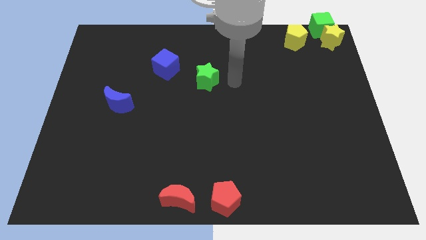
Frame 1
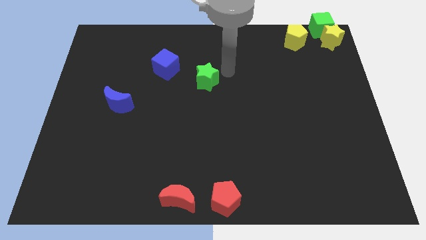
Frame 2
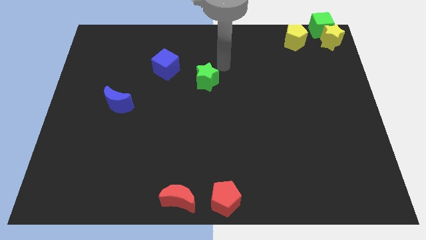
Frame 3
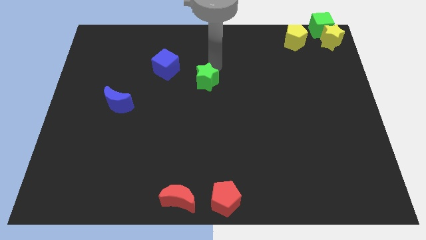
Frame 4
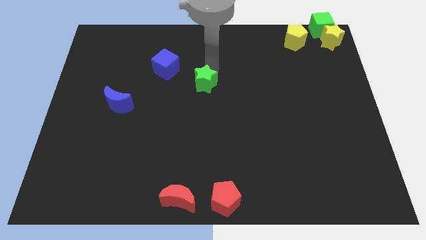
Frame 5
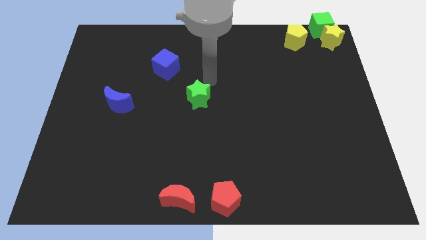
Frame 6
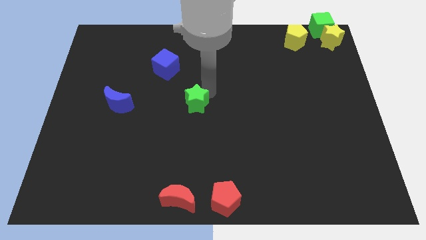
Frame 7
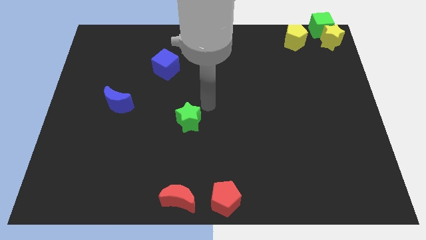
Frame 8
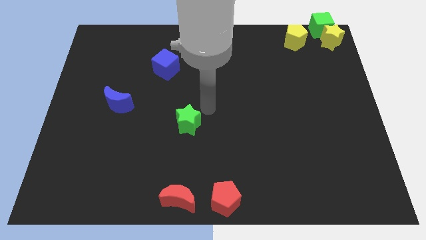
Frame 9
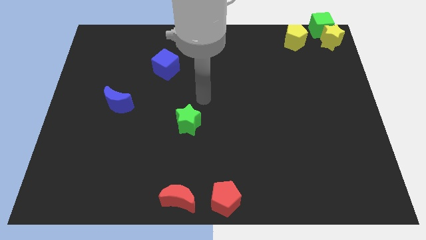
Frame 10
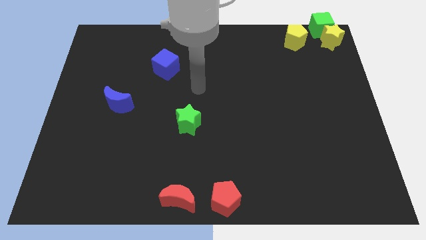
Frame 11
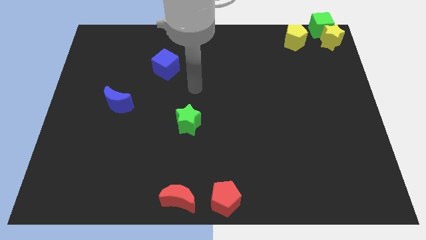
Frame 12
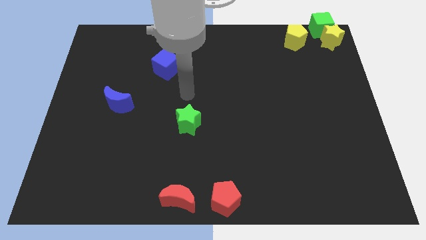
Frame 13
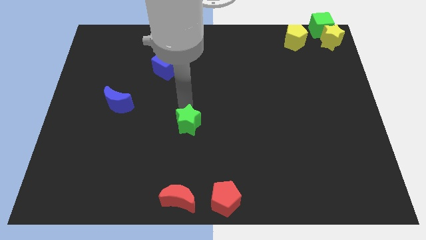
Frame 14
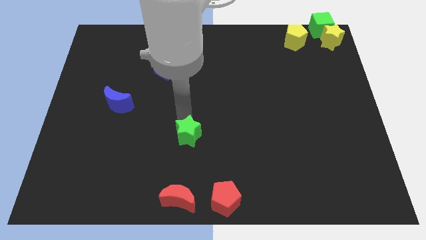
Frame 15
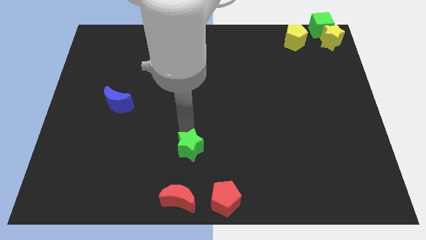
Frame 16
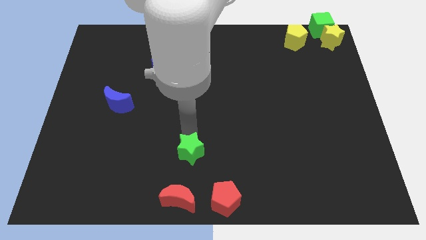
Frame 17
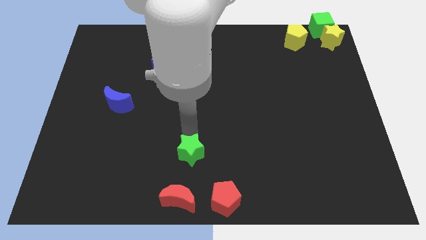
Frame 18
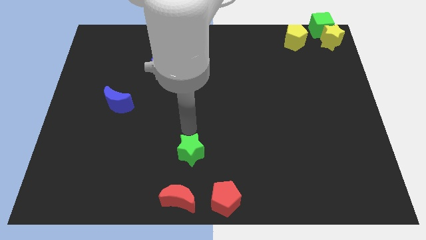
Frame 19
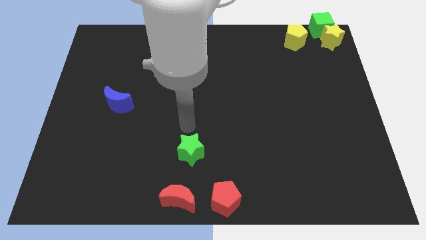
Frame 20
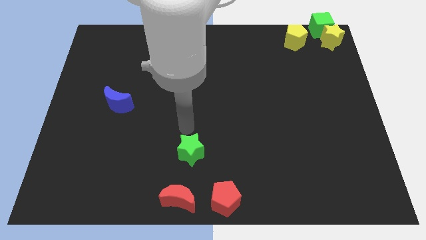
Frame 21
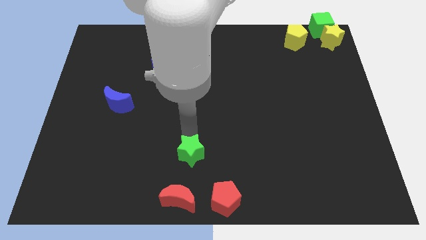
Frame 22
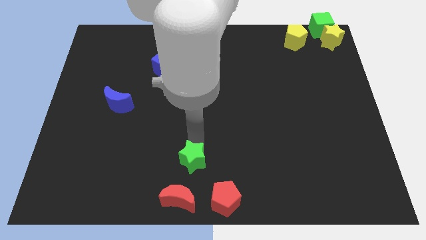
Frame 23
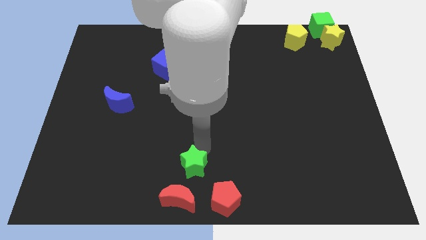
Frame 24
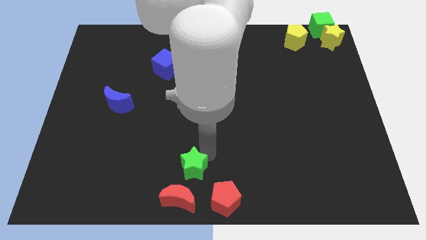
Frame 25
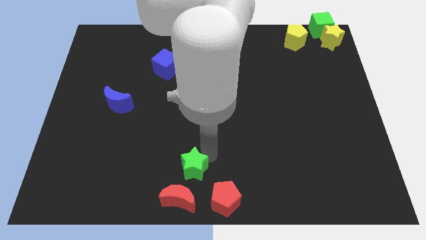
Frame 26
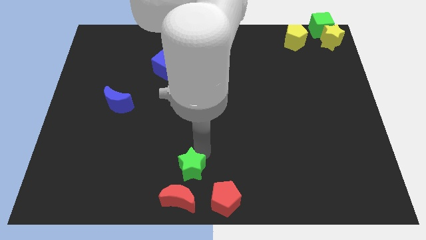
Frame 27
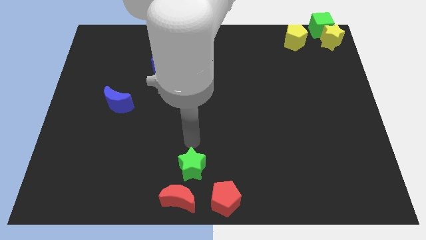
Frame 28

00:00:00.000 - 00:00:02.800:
push the green star towards the red moon

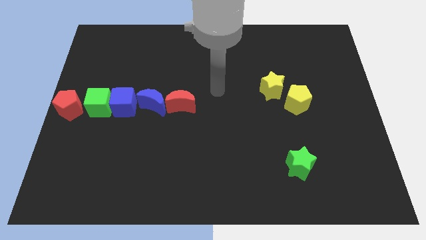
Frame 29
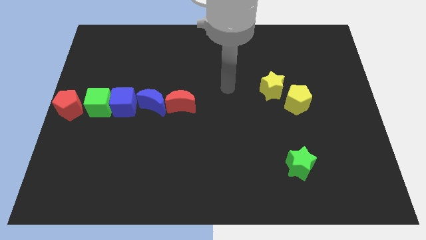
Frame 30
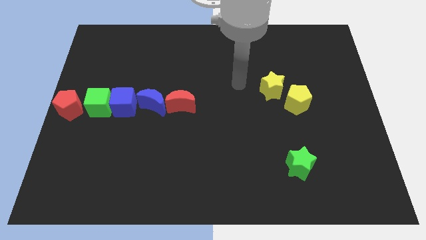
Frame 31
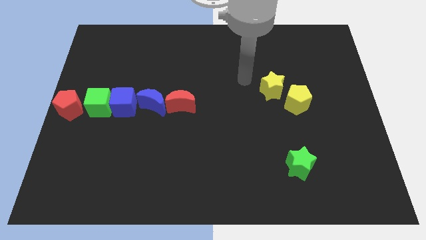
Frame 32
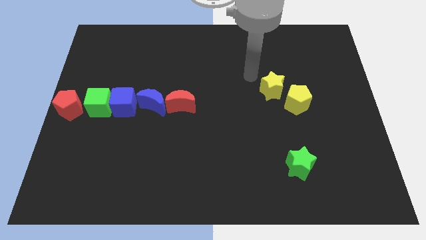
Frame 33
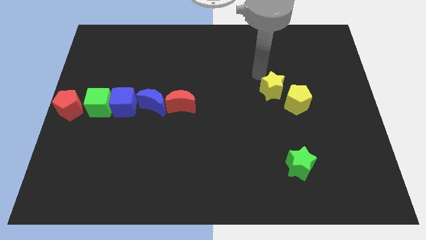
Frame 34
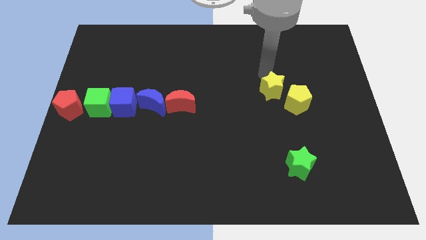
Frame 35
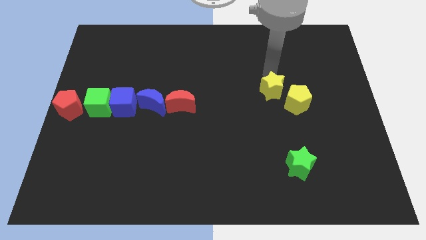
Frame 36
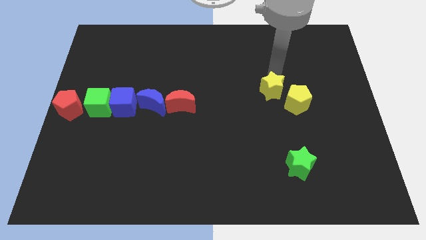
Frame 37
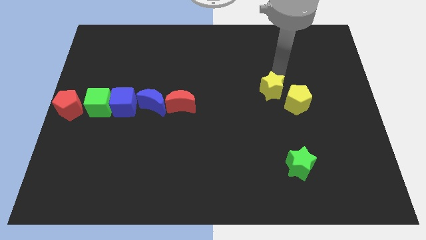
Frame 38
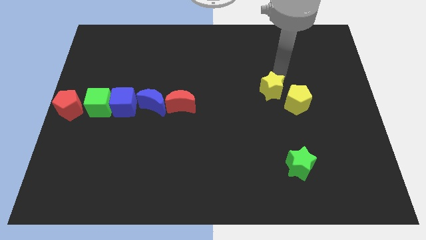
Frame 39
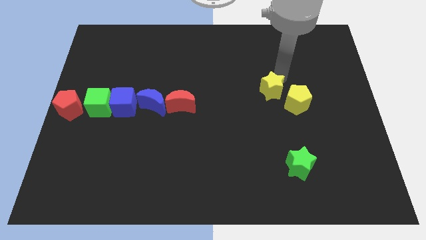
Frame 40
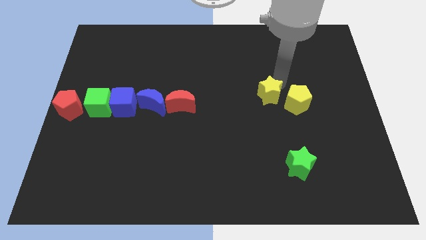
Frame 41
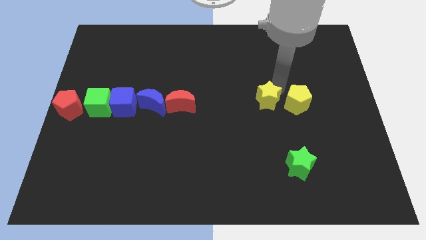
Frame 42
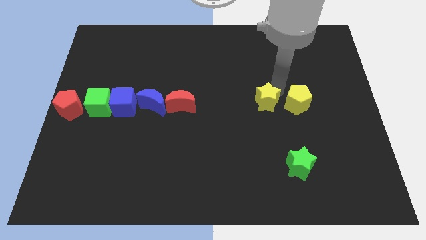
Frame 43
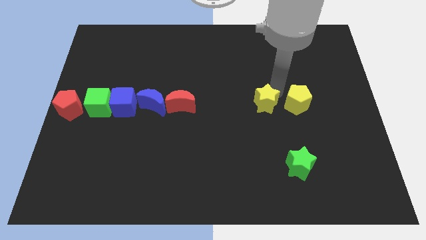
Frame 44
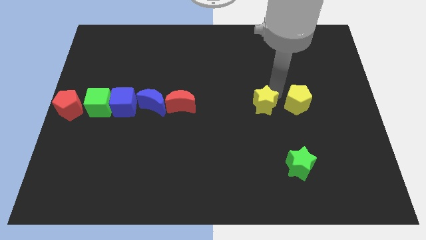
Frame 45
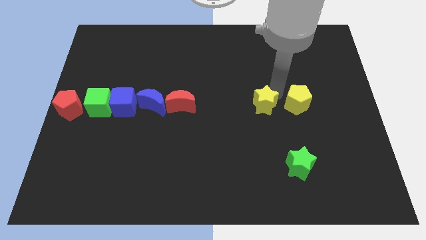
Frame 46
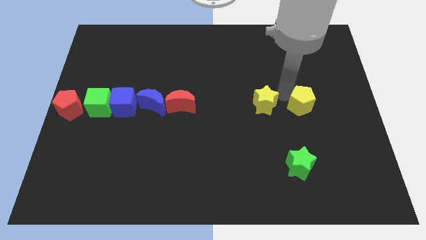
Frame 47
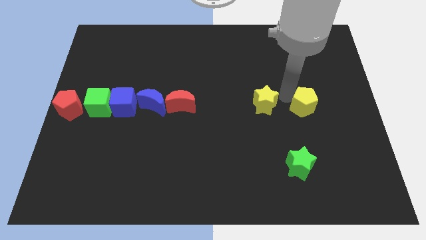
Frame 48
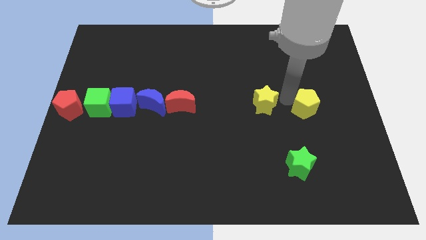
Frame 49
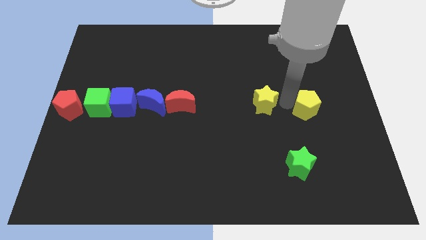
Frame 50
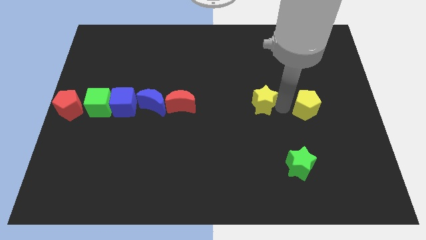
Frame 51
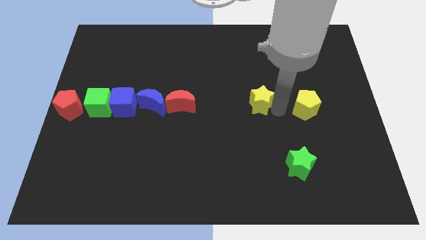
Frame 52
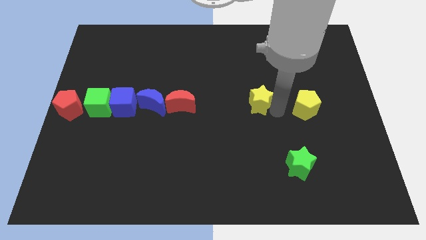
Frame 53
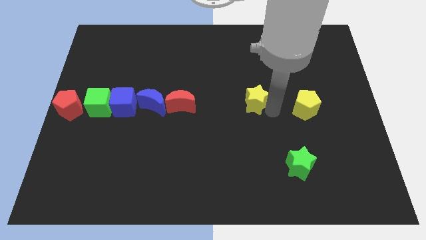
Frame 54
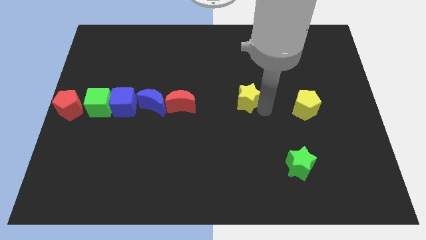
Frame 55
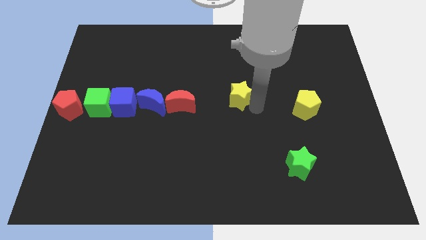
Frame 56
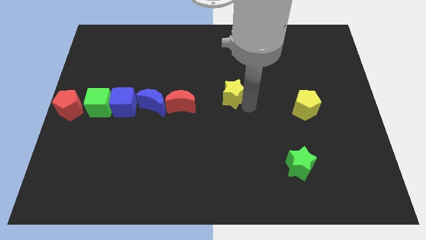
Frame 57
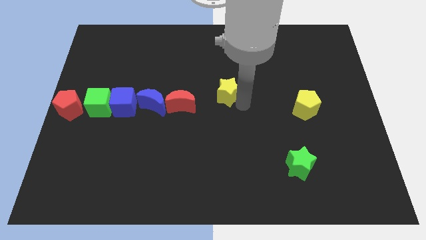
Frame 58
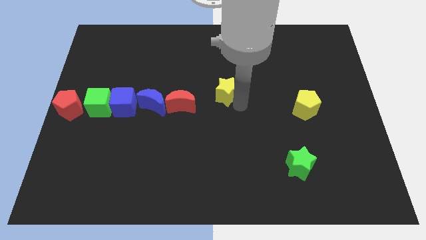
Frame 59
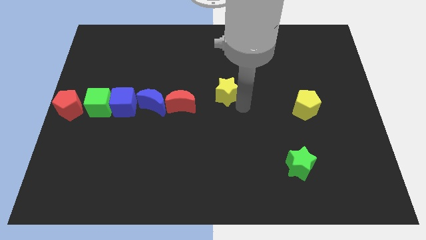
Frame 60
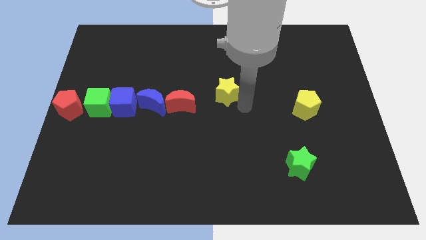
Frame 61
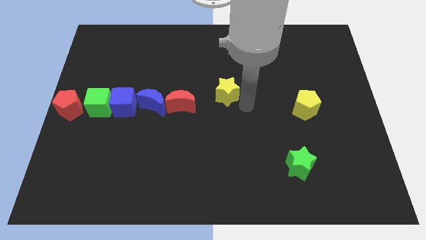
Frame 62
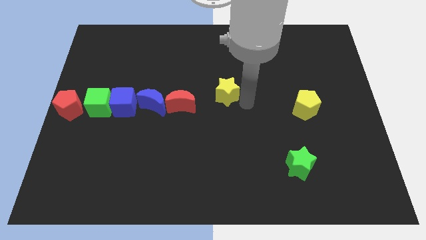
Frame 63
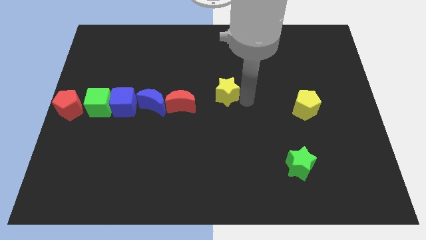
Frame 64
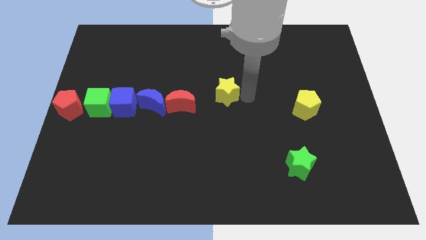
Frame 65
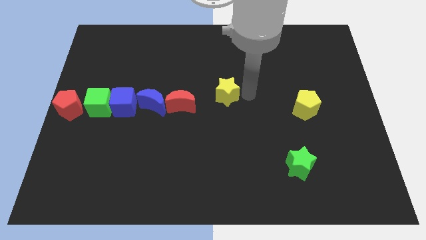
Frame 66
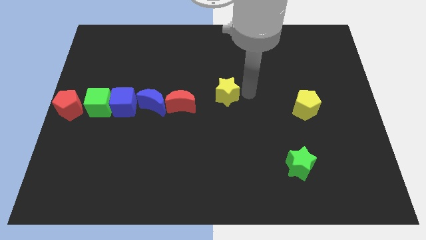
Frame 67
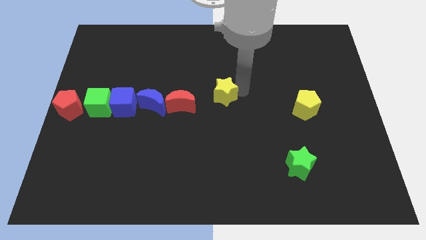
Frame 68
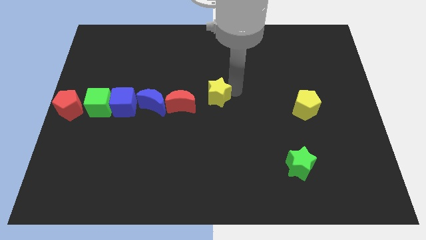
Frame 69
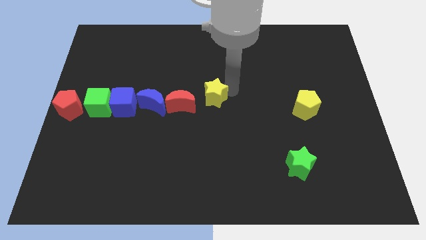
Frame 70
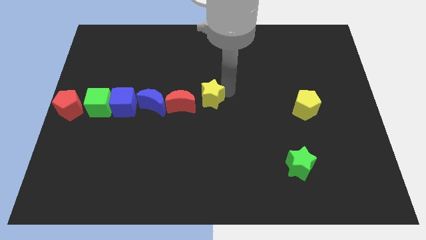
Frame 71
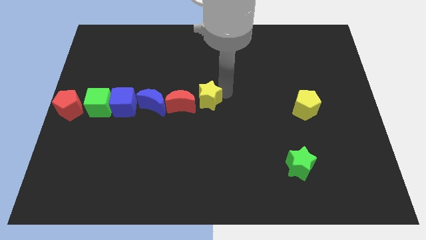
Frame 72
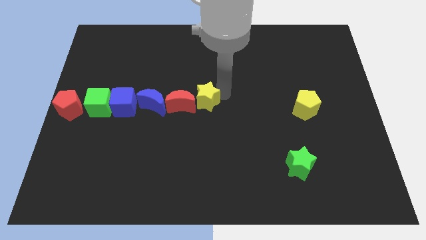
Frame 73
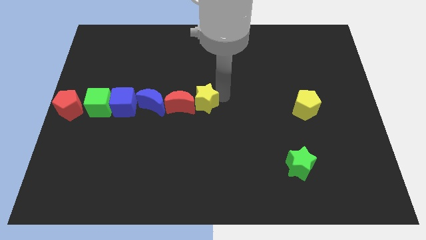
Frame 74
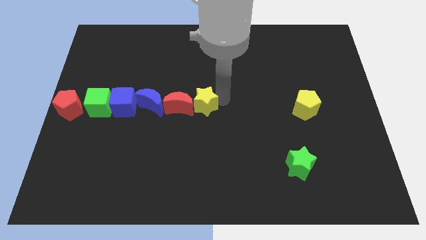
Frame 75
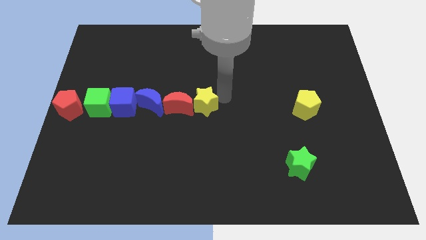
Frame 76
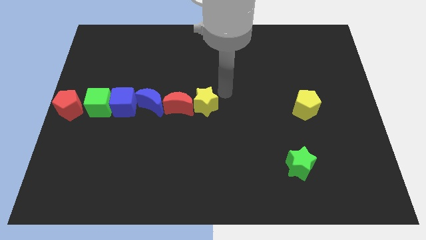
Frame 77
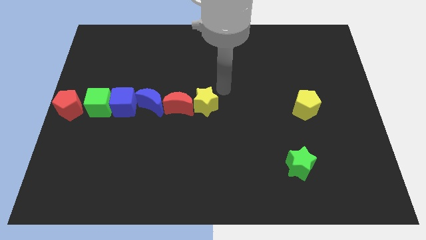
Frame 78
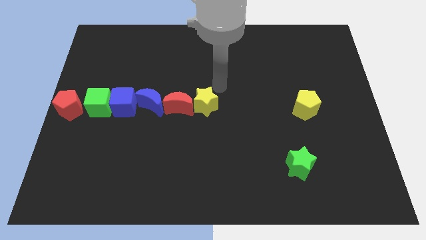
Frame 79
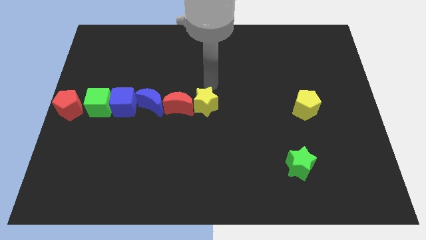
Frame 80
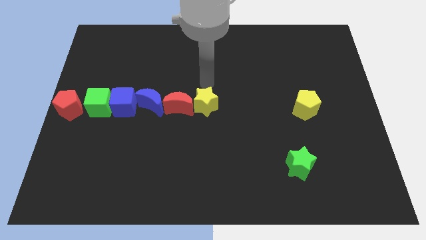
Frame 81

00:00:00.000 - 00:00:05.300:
move the yellow star to the right of the red crescent

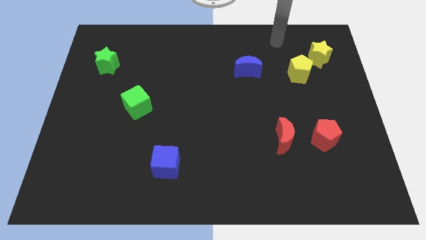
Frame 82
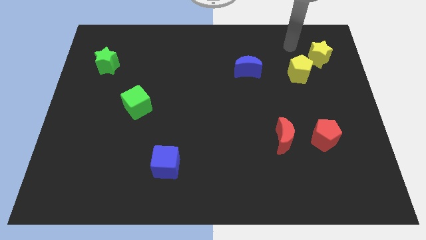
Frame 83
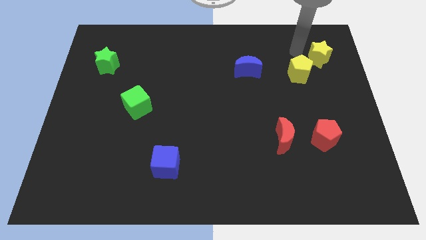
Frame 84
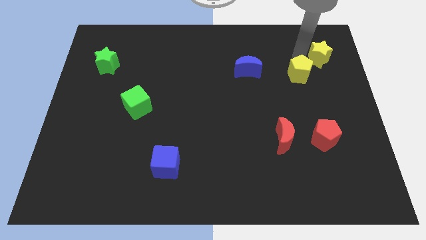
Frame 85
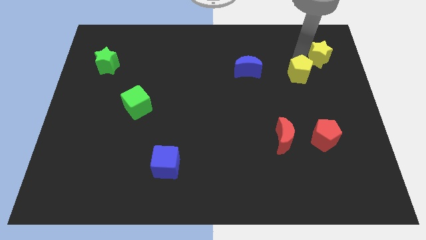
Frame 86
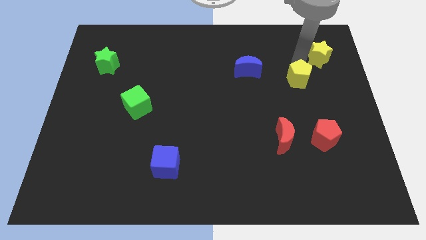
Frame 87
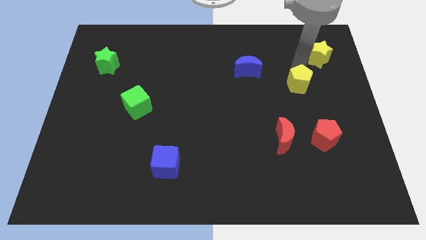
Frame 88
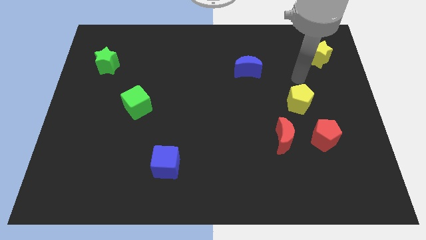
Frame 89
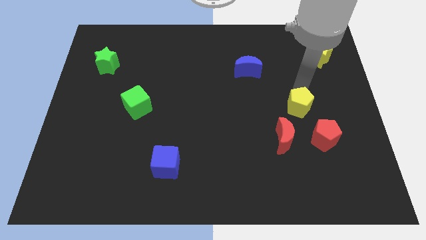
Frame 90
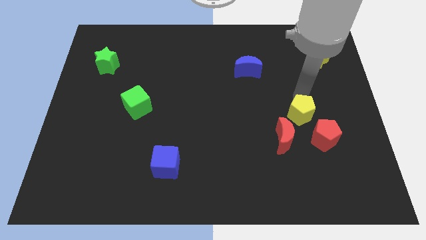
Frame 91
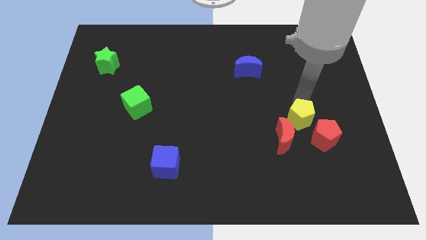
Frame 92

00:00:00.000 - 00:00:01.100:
place the yellow pentagon diagonal to the top left of the red pentagon
